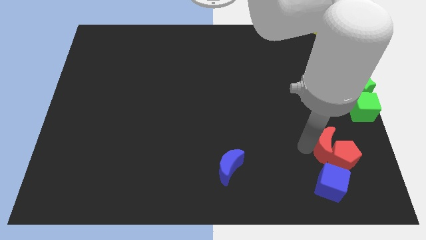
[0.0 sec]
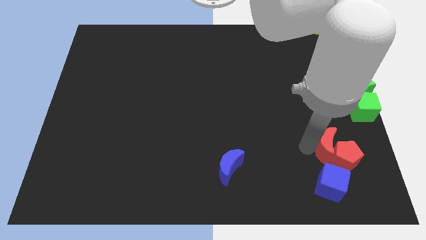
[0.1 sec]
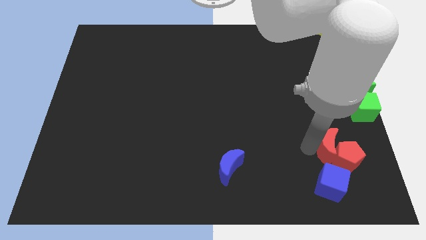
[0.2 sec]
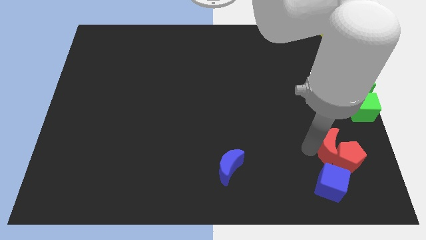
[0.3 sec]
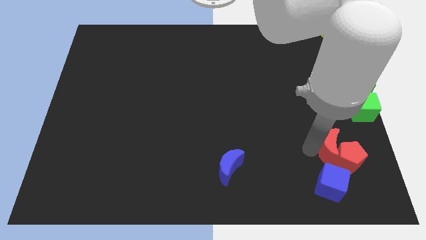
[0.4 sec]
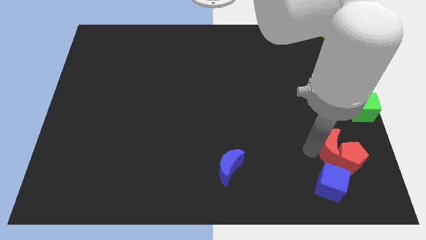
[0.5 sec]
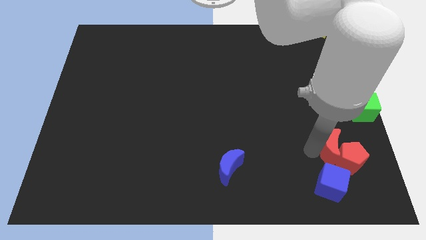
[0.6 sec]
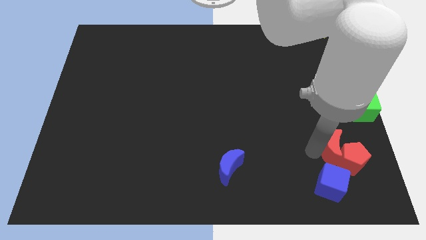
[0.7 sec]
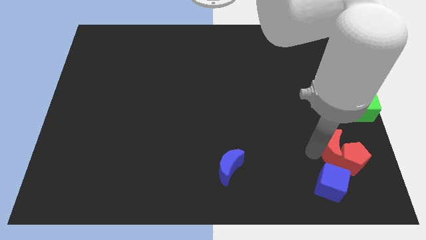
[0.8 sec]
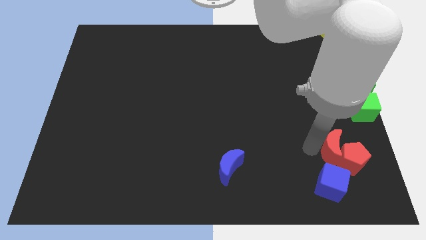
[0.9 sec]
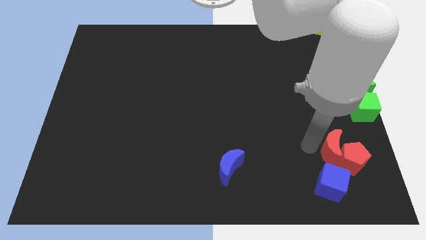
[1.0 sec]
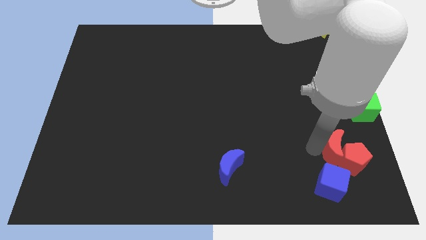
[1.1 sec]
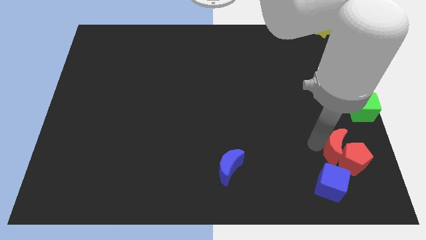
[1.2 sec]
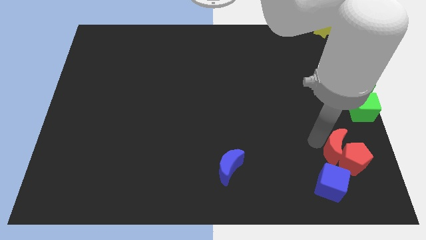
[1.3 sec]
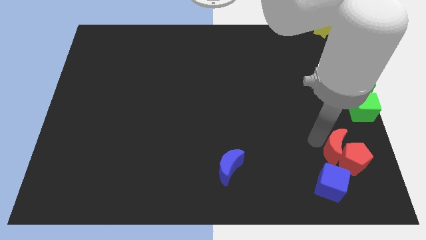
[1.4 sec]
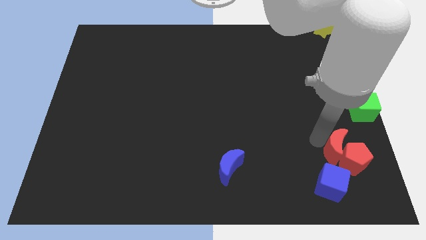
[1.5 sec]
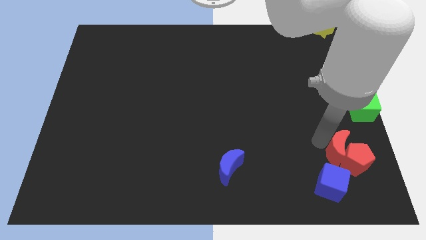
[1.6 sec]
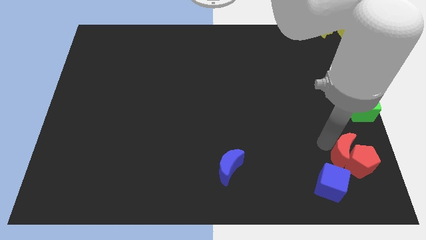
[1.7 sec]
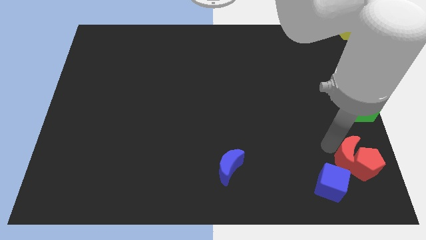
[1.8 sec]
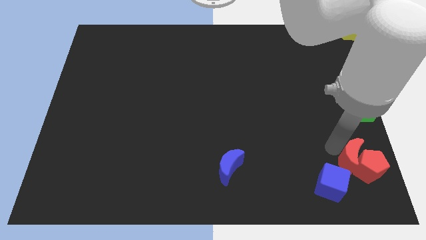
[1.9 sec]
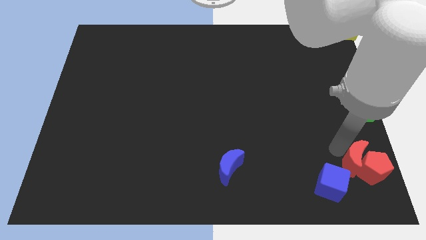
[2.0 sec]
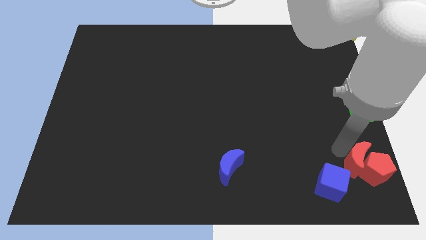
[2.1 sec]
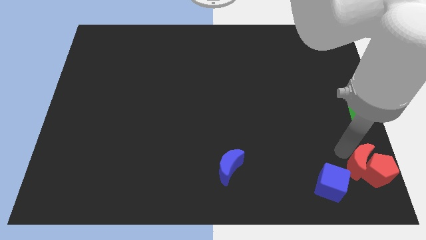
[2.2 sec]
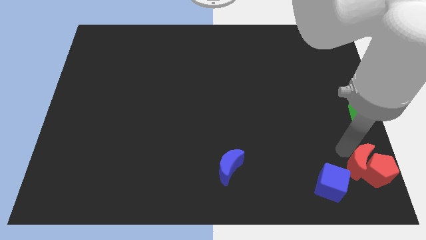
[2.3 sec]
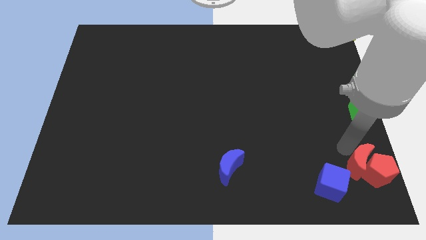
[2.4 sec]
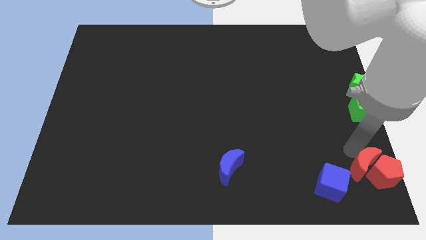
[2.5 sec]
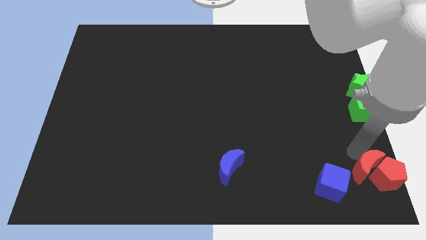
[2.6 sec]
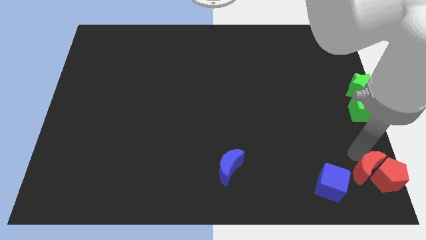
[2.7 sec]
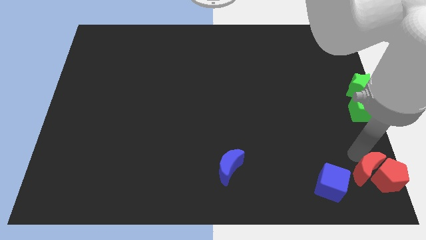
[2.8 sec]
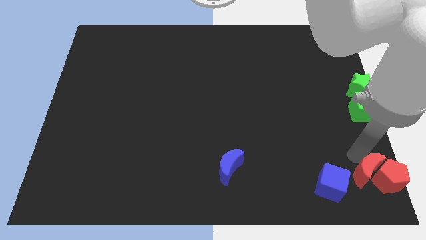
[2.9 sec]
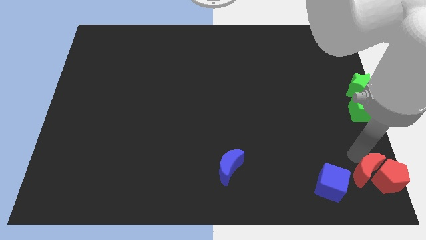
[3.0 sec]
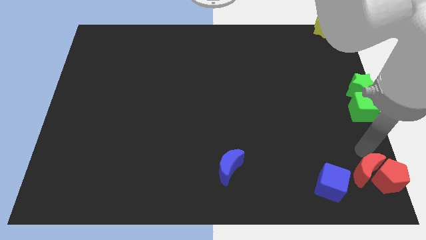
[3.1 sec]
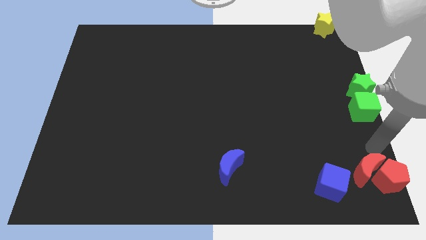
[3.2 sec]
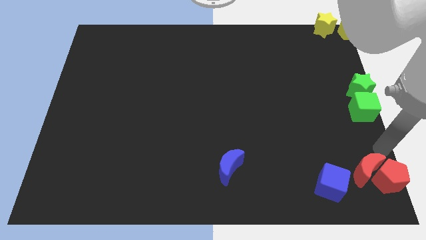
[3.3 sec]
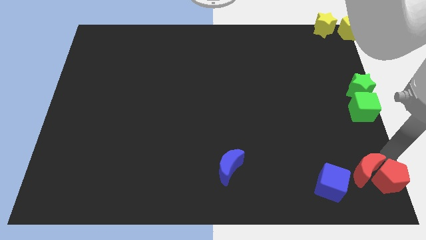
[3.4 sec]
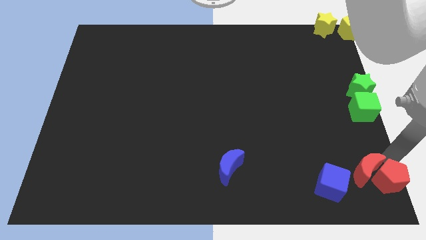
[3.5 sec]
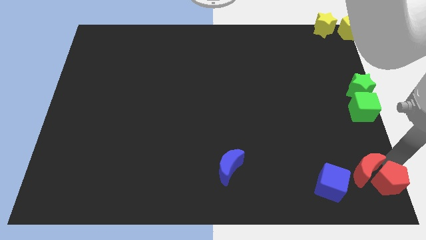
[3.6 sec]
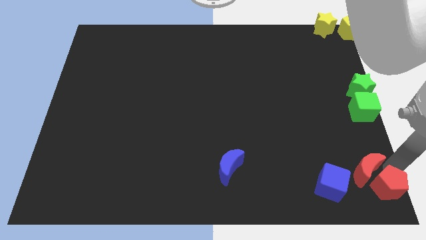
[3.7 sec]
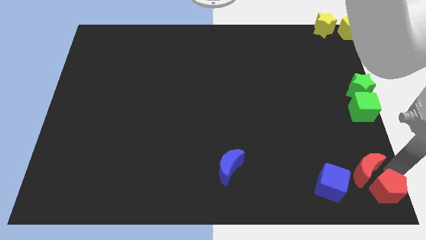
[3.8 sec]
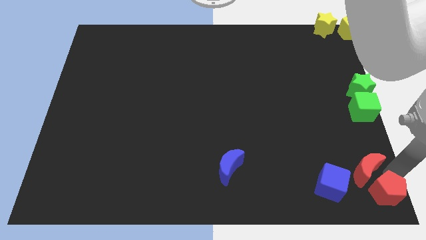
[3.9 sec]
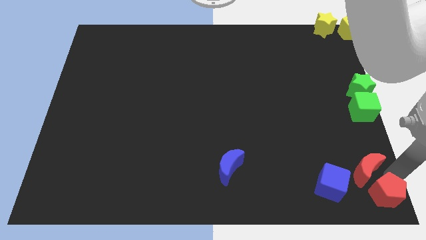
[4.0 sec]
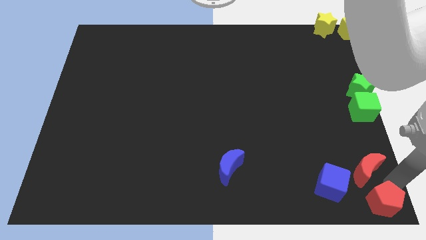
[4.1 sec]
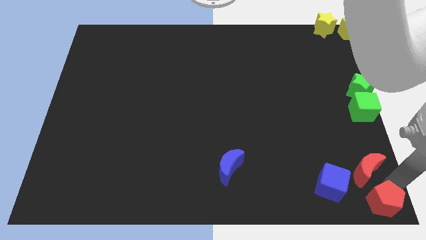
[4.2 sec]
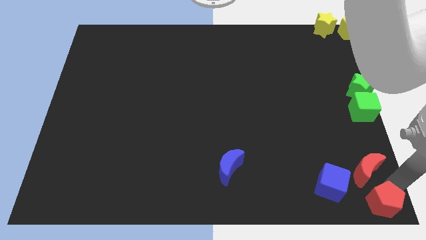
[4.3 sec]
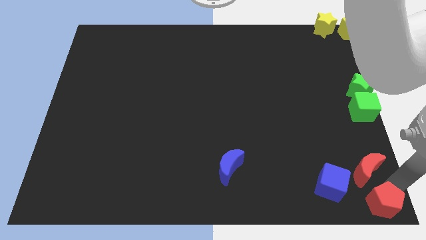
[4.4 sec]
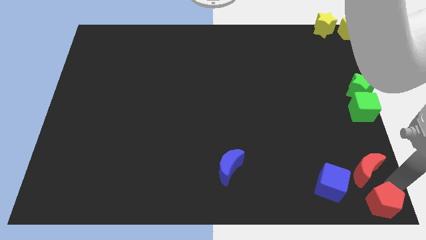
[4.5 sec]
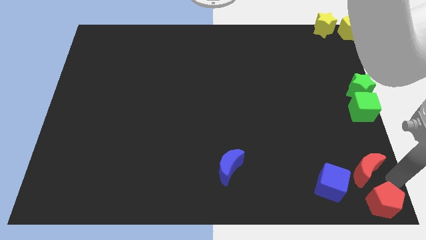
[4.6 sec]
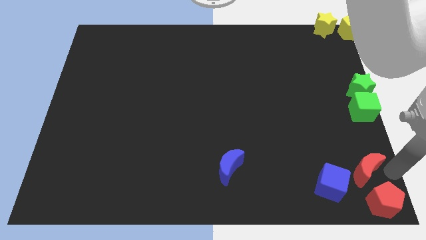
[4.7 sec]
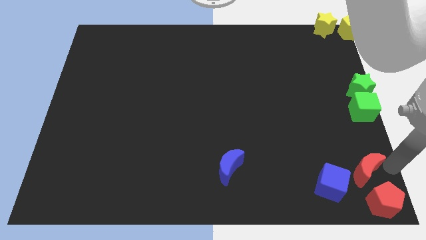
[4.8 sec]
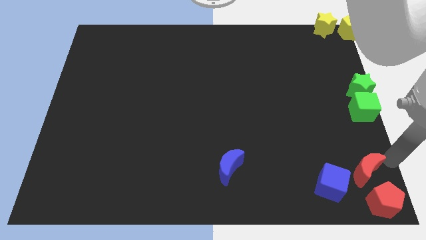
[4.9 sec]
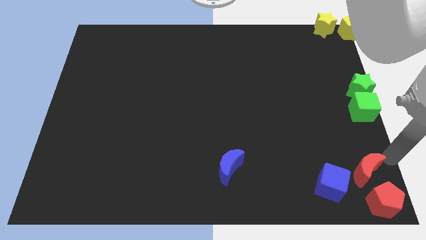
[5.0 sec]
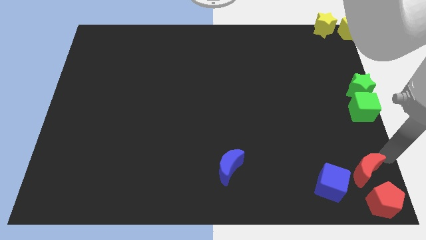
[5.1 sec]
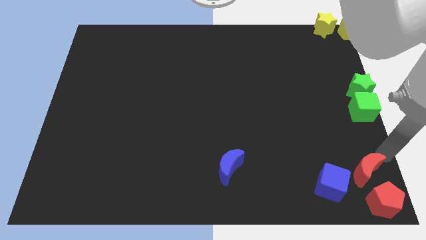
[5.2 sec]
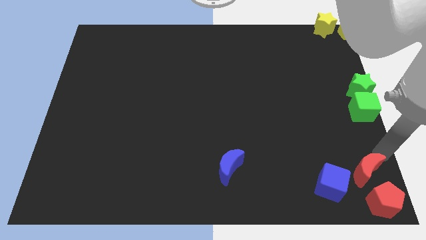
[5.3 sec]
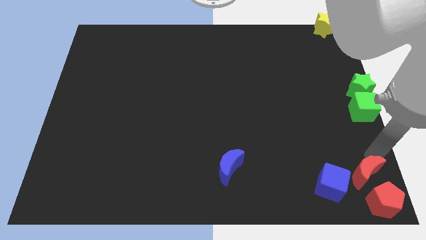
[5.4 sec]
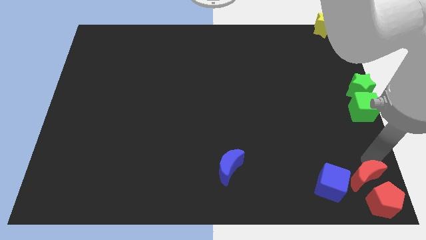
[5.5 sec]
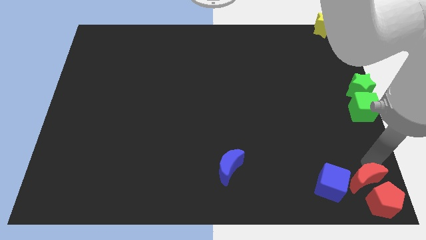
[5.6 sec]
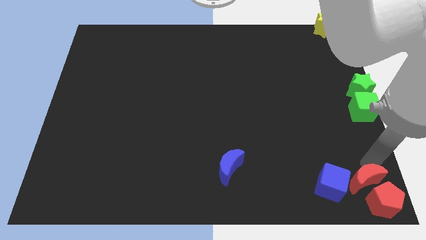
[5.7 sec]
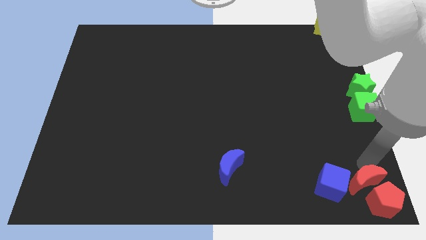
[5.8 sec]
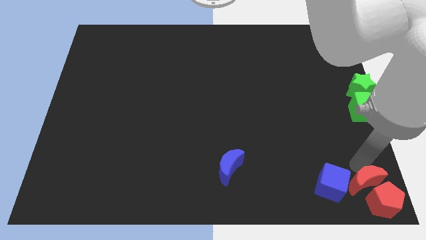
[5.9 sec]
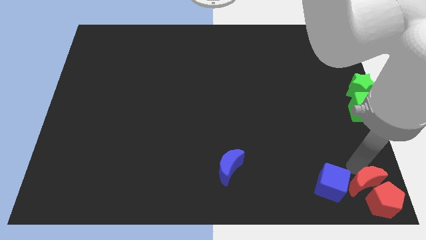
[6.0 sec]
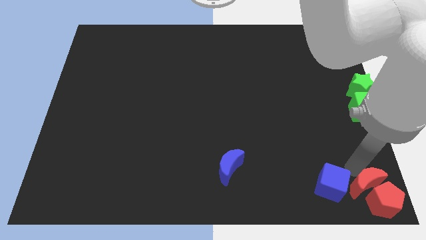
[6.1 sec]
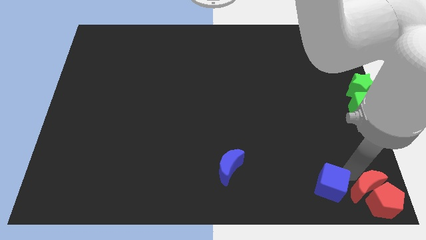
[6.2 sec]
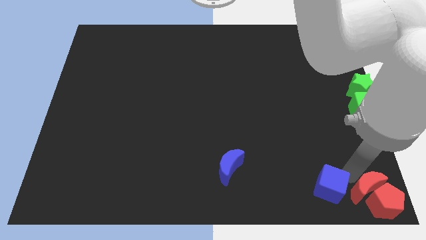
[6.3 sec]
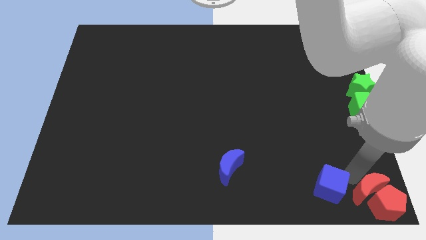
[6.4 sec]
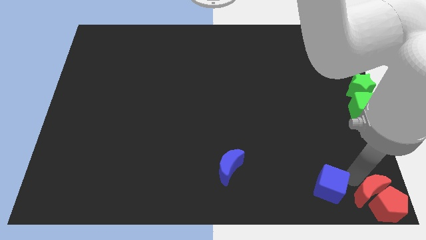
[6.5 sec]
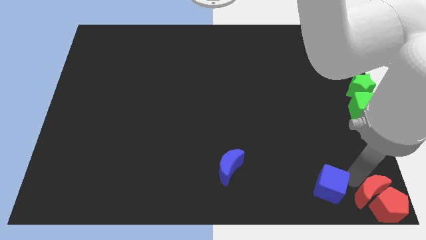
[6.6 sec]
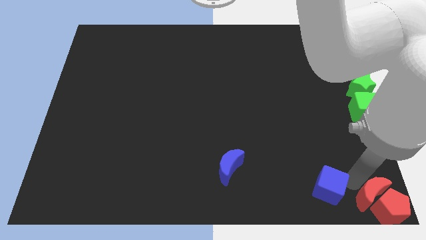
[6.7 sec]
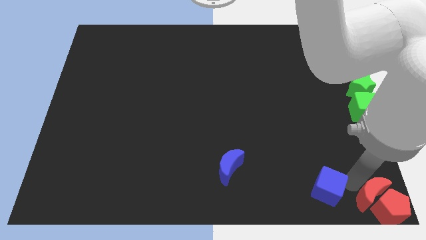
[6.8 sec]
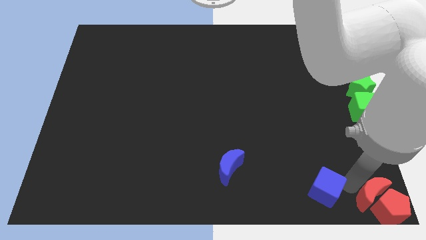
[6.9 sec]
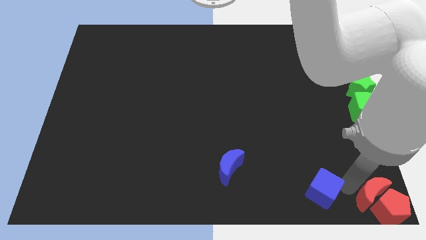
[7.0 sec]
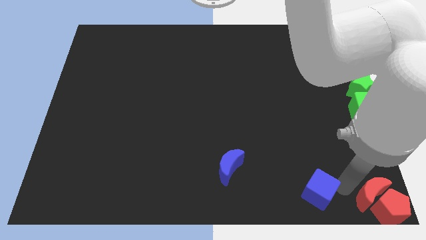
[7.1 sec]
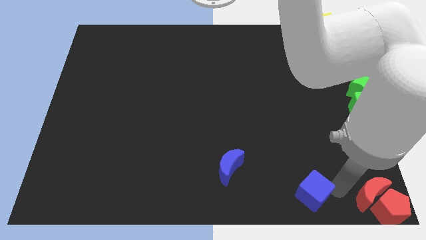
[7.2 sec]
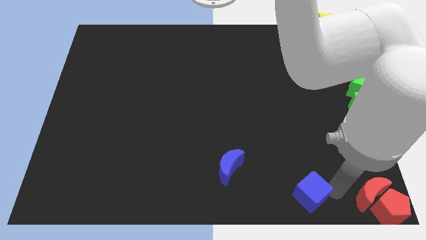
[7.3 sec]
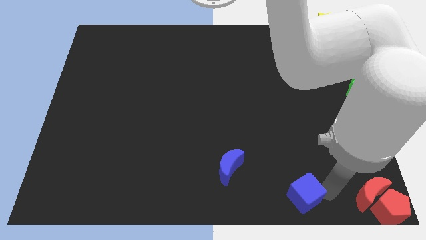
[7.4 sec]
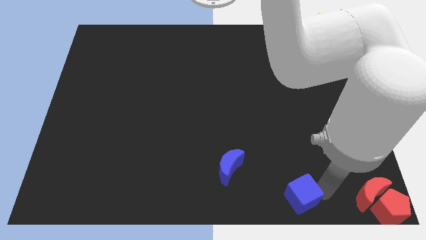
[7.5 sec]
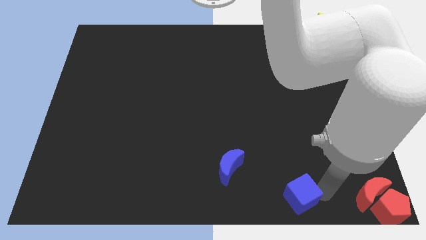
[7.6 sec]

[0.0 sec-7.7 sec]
move the red pentagon and red crescent to the bottom right corner

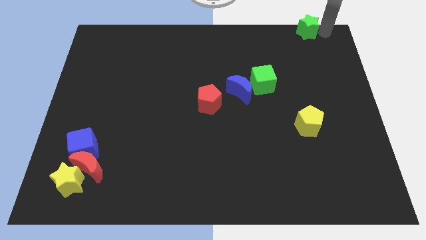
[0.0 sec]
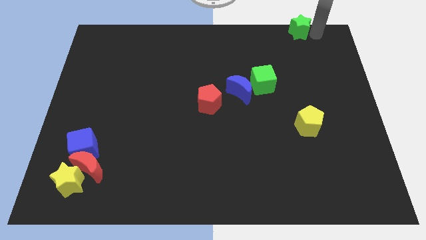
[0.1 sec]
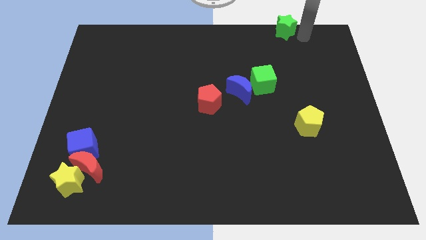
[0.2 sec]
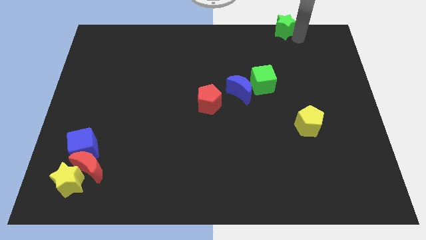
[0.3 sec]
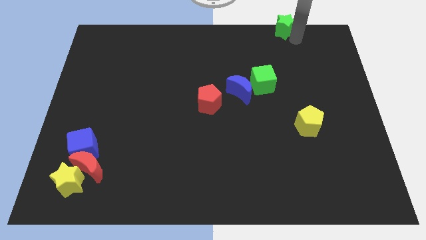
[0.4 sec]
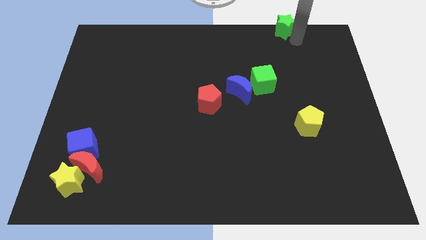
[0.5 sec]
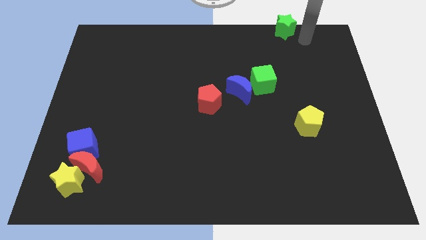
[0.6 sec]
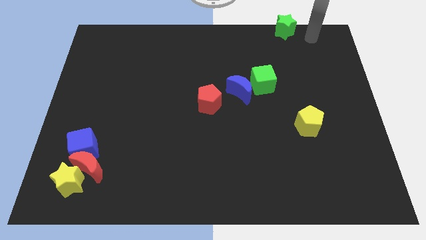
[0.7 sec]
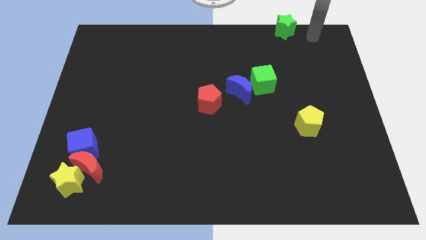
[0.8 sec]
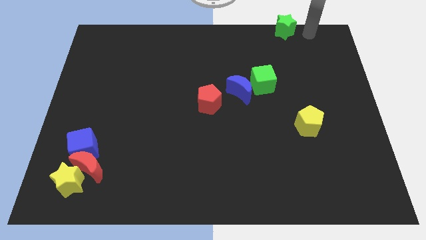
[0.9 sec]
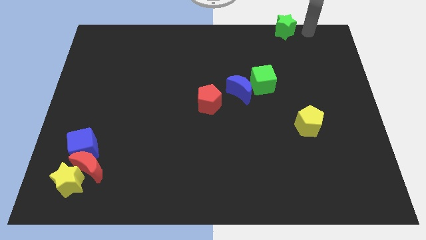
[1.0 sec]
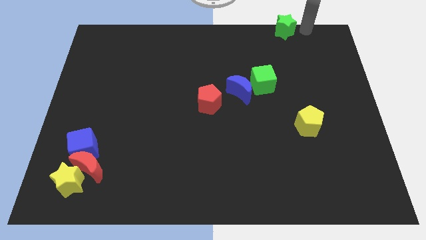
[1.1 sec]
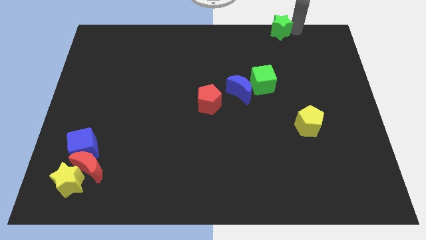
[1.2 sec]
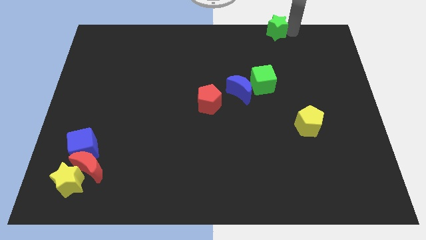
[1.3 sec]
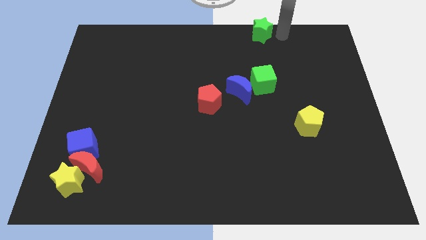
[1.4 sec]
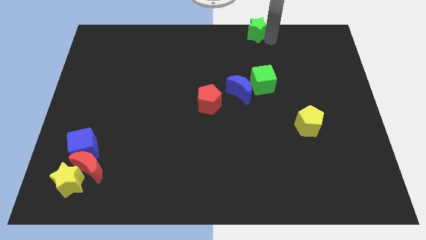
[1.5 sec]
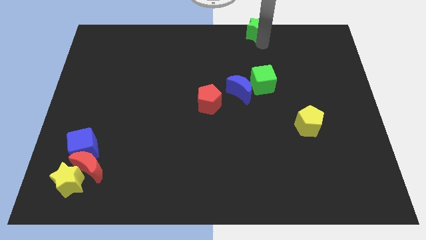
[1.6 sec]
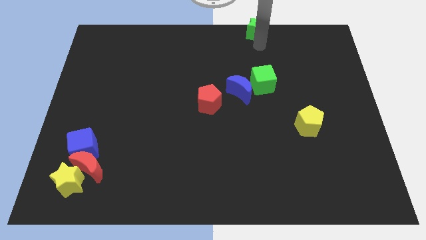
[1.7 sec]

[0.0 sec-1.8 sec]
move the green star to the top of the green cube
